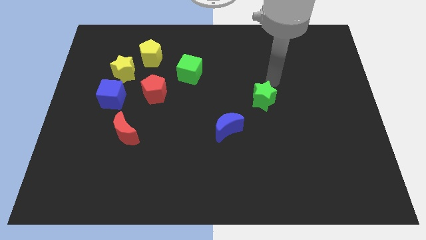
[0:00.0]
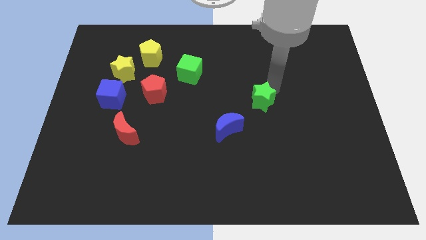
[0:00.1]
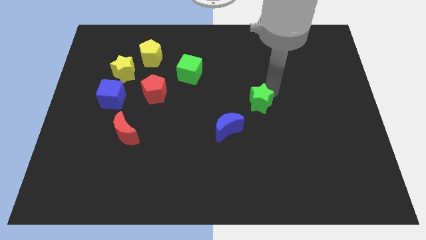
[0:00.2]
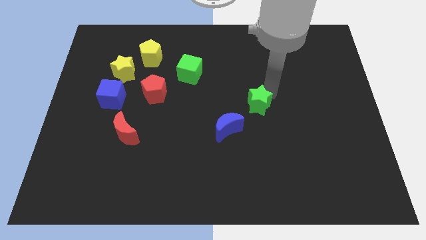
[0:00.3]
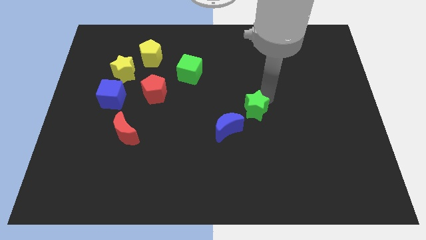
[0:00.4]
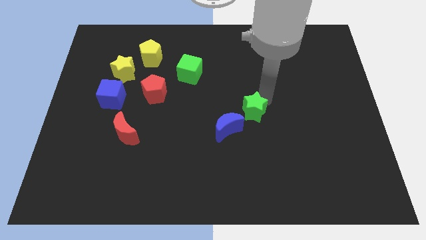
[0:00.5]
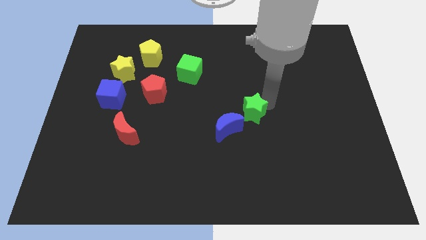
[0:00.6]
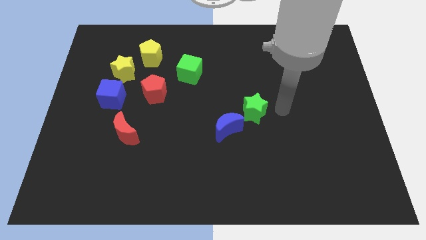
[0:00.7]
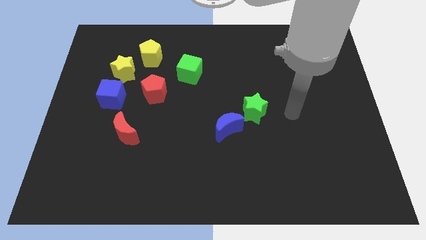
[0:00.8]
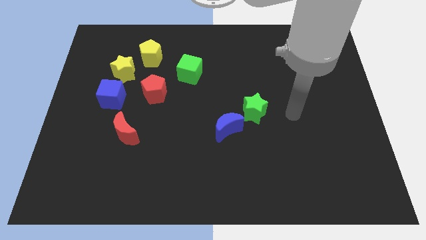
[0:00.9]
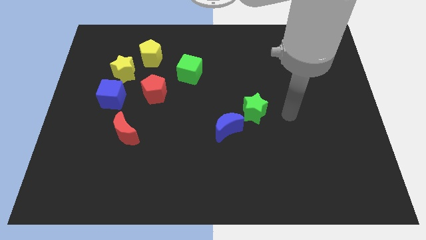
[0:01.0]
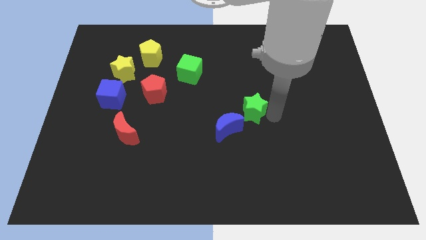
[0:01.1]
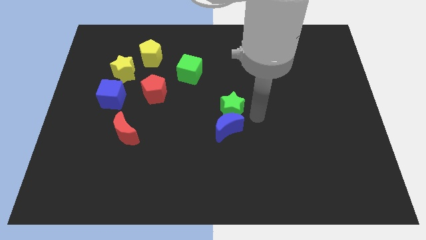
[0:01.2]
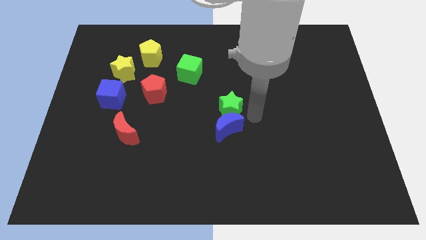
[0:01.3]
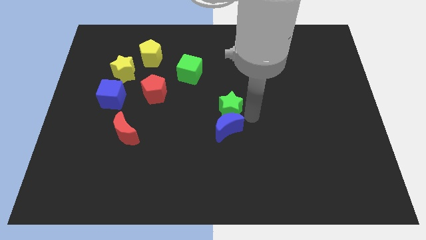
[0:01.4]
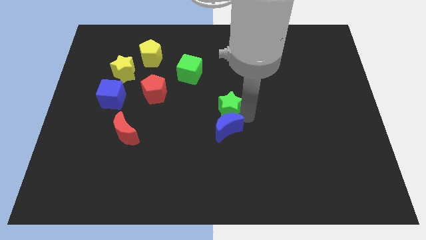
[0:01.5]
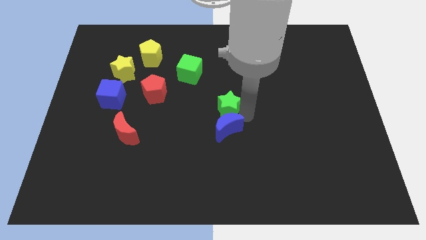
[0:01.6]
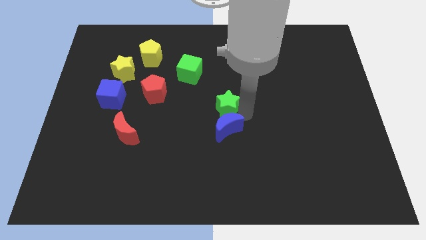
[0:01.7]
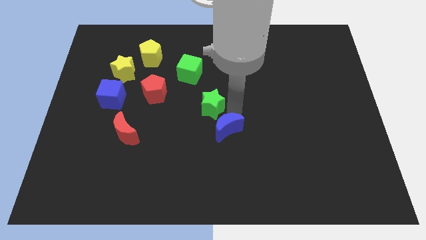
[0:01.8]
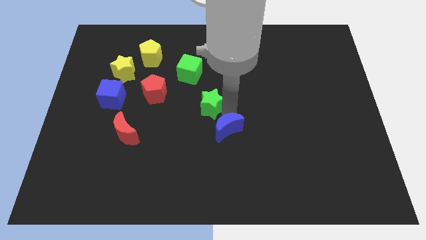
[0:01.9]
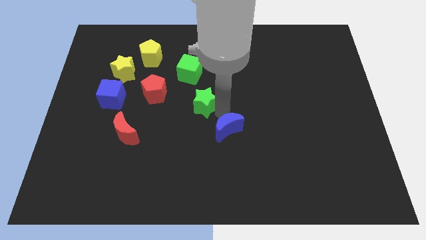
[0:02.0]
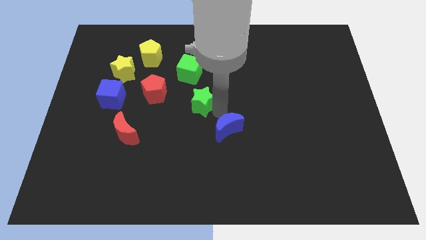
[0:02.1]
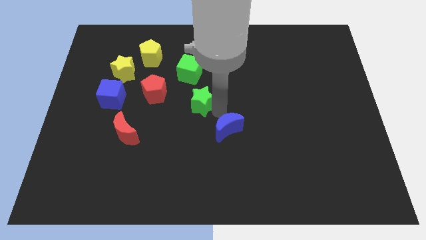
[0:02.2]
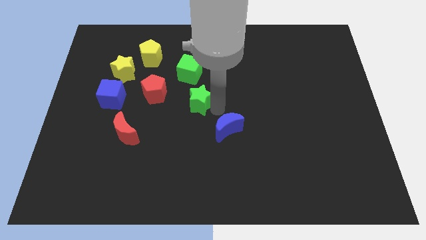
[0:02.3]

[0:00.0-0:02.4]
move the green star between green cube and blue moon

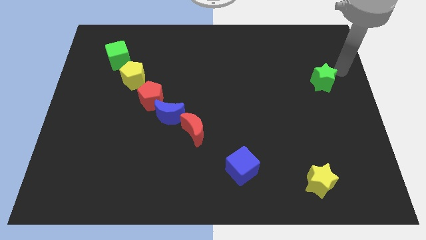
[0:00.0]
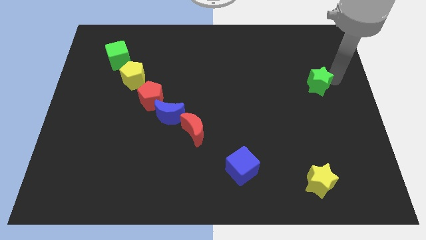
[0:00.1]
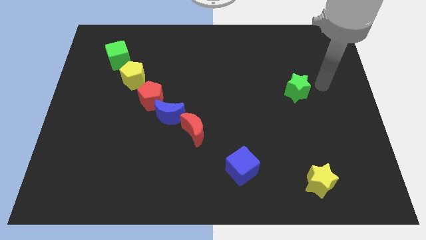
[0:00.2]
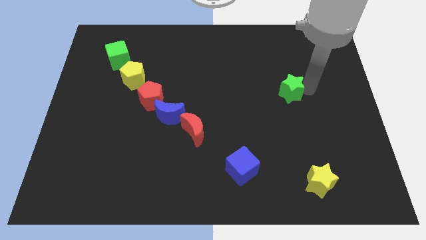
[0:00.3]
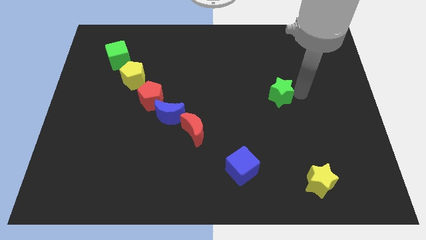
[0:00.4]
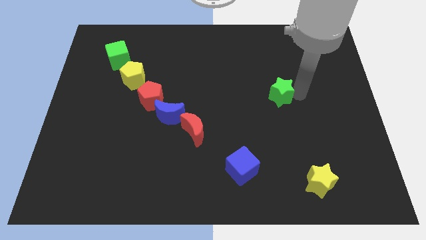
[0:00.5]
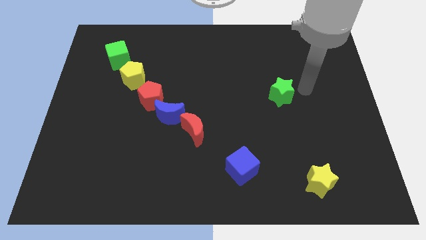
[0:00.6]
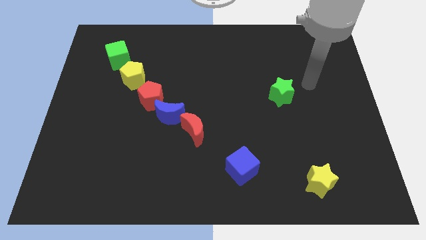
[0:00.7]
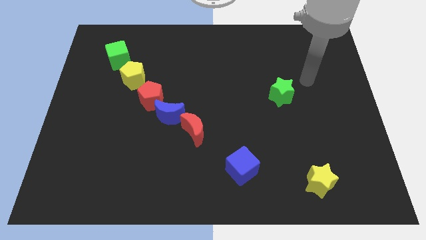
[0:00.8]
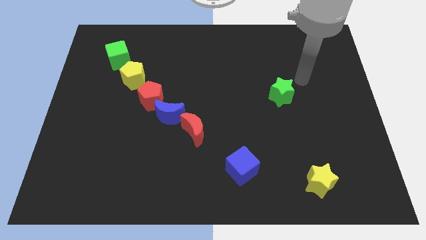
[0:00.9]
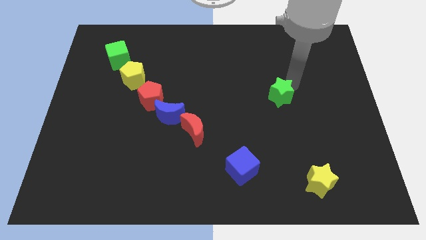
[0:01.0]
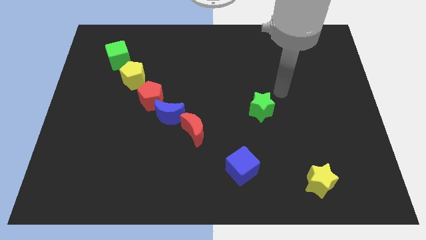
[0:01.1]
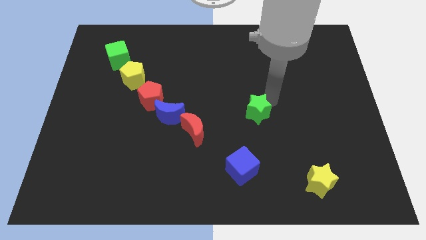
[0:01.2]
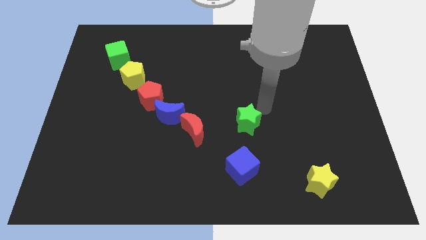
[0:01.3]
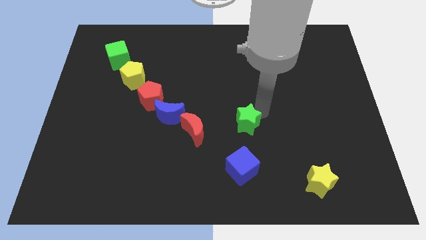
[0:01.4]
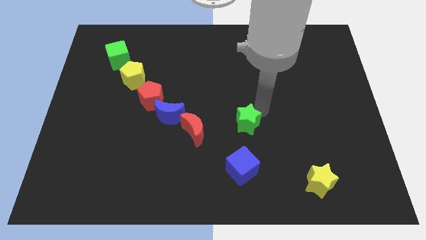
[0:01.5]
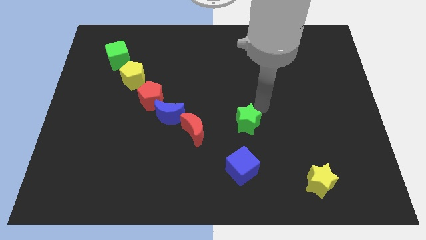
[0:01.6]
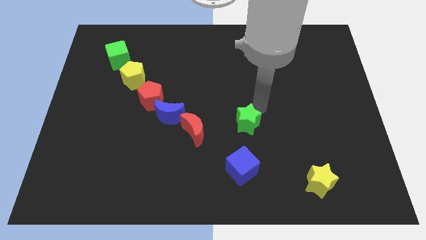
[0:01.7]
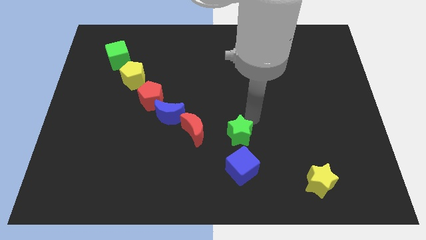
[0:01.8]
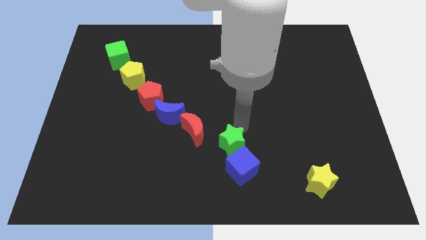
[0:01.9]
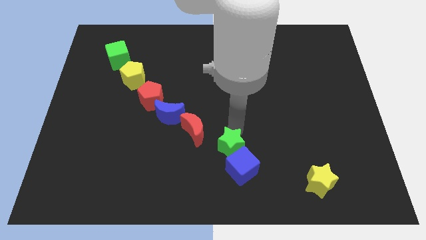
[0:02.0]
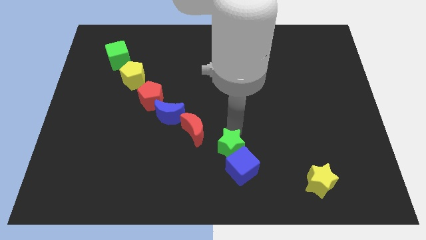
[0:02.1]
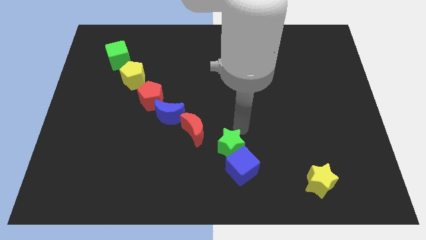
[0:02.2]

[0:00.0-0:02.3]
push the green star close to the blue cube

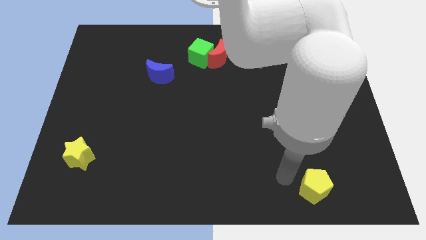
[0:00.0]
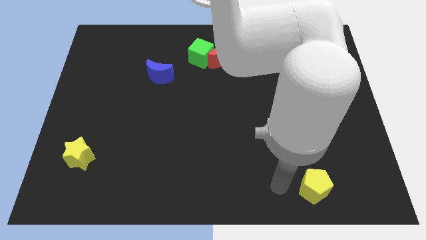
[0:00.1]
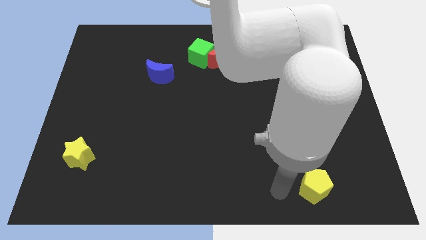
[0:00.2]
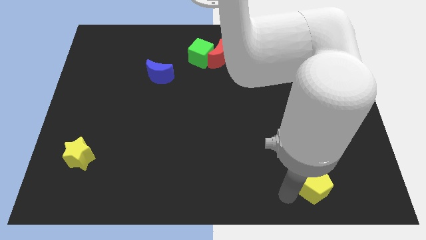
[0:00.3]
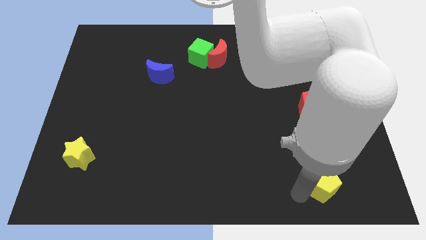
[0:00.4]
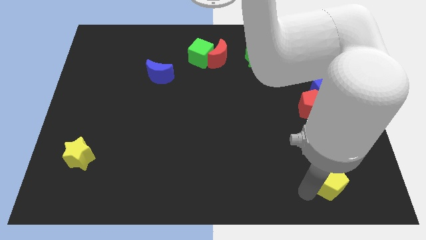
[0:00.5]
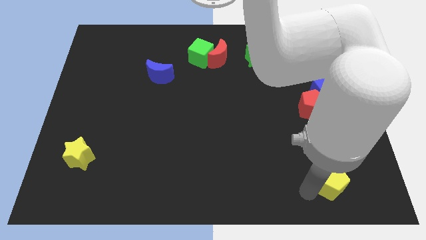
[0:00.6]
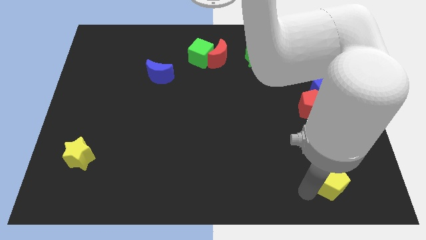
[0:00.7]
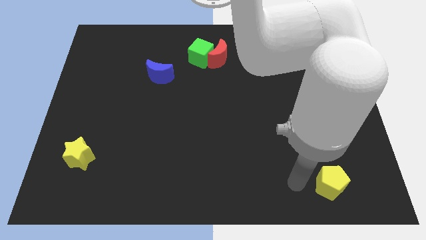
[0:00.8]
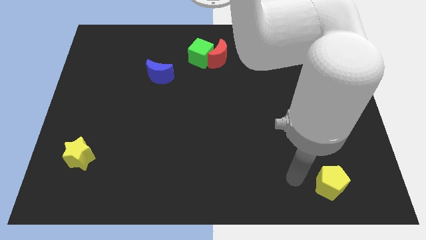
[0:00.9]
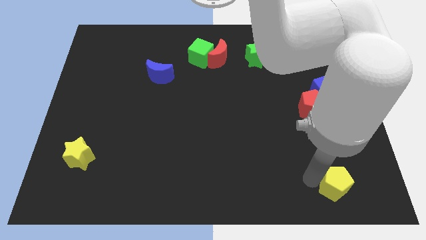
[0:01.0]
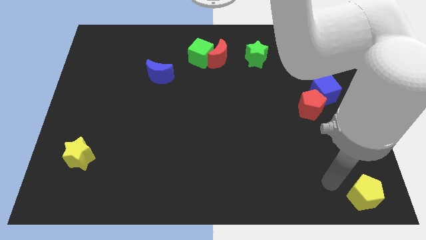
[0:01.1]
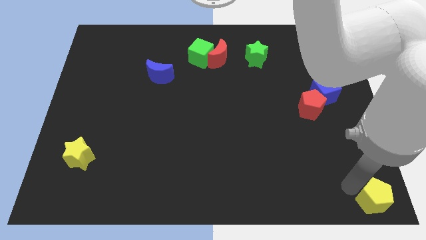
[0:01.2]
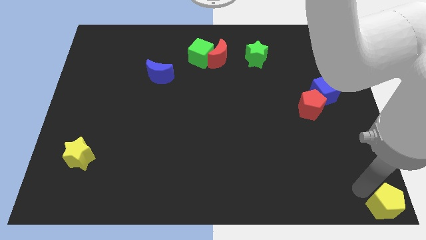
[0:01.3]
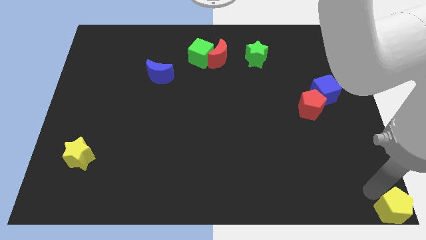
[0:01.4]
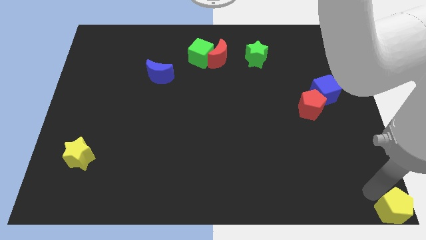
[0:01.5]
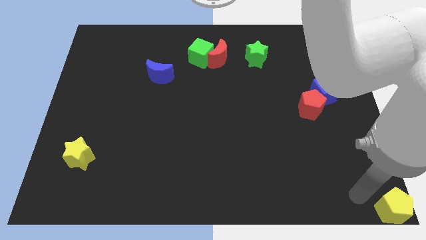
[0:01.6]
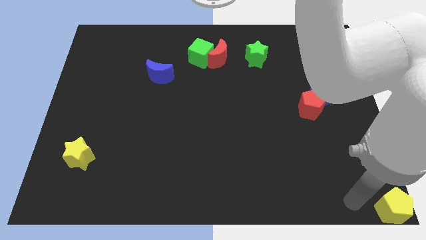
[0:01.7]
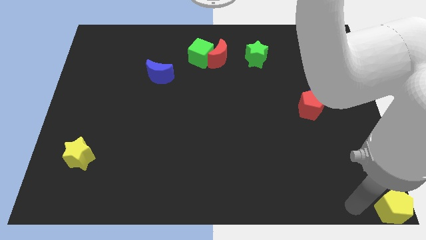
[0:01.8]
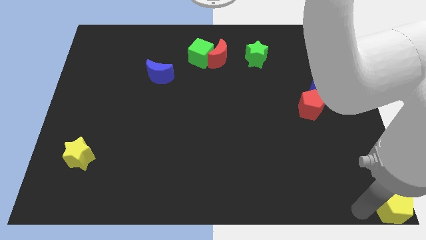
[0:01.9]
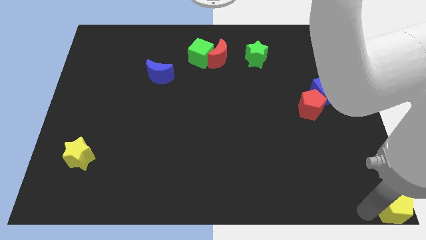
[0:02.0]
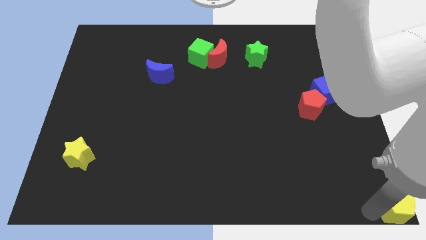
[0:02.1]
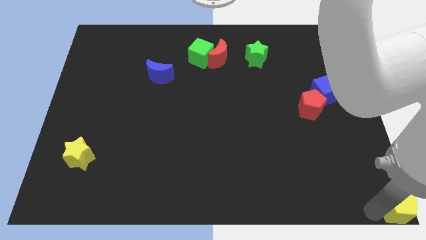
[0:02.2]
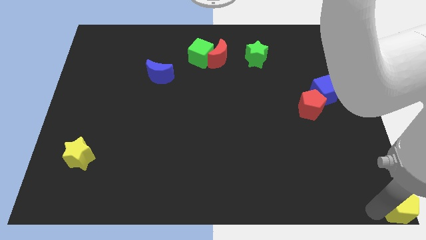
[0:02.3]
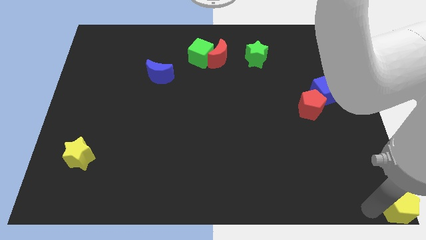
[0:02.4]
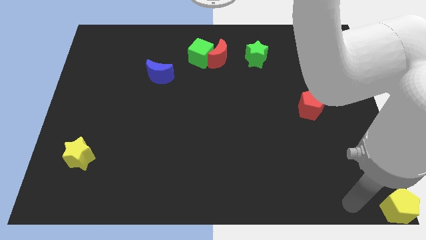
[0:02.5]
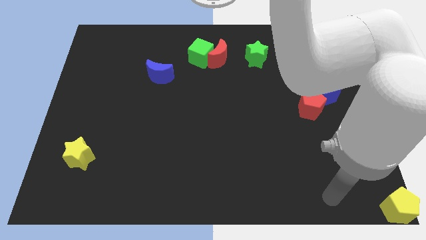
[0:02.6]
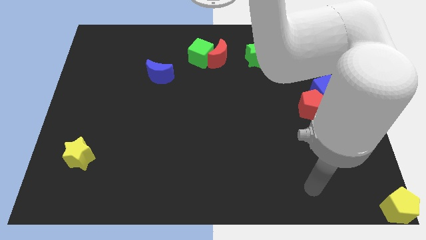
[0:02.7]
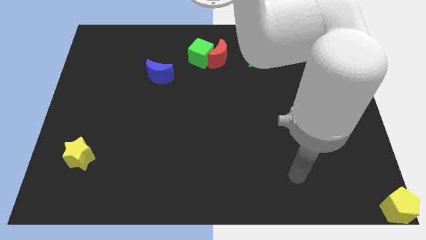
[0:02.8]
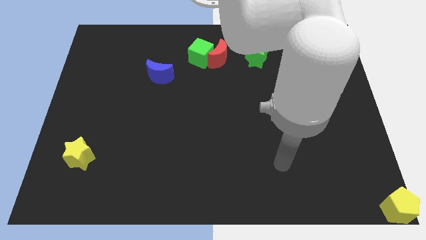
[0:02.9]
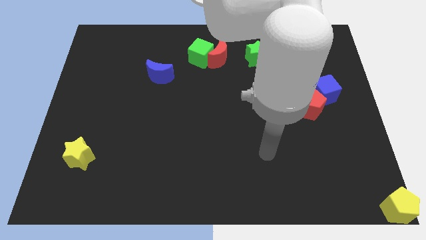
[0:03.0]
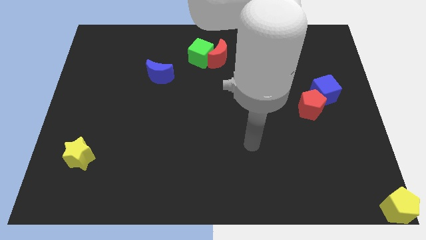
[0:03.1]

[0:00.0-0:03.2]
push the yellow pentagon to the bottom right

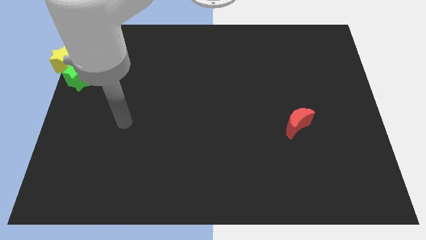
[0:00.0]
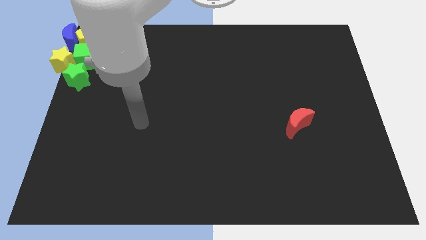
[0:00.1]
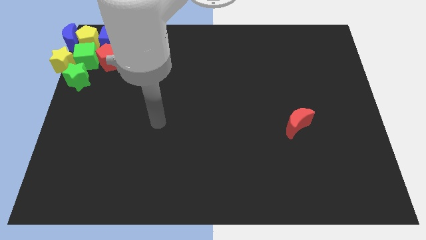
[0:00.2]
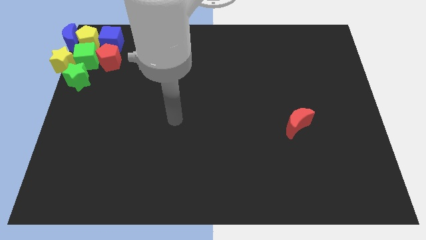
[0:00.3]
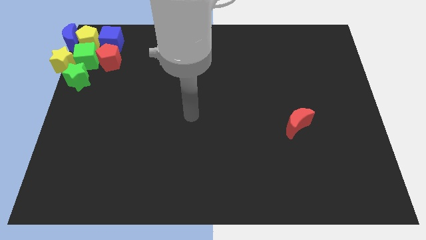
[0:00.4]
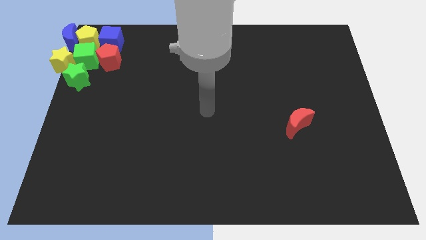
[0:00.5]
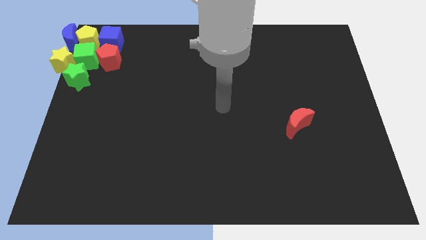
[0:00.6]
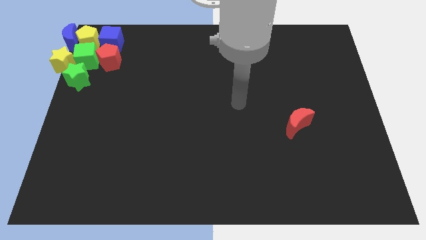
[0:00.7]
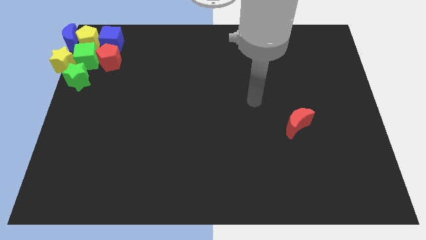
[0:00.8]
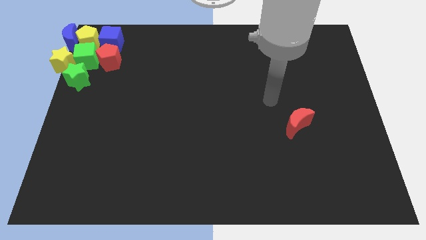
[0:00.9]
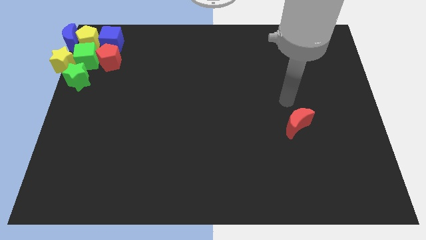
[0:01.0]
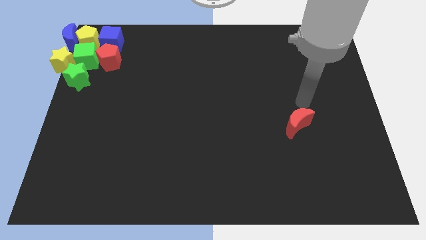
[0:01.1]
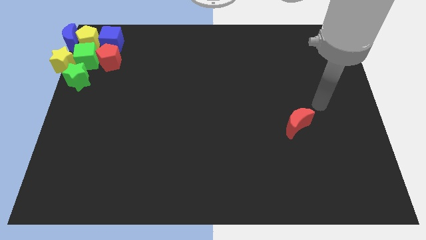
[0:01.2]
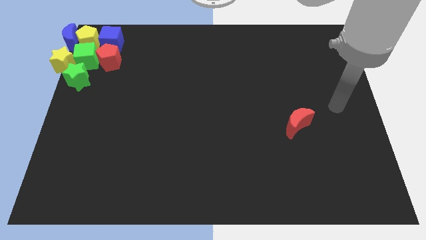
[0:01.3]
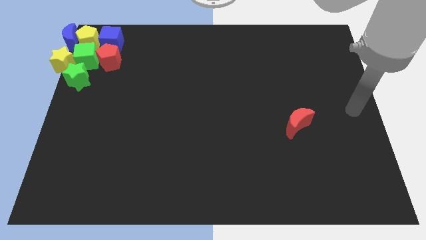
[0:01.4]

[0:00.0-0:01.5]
move your hand to the center right
